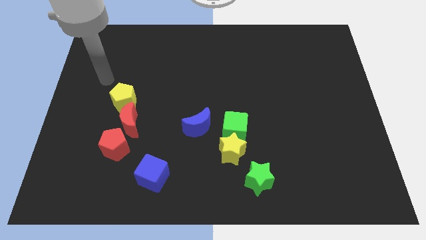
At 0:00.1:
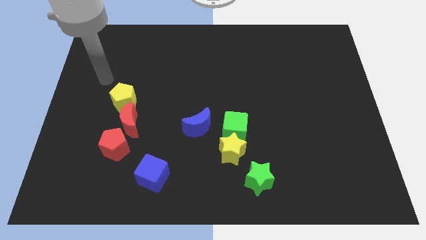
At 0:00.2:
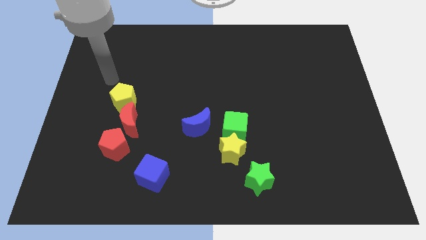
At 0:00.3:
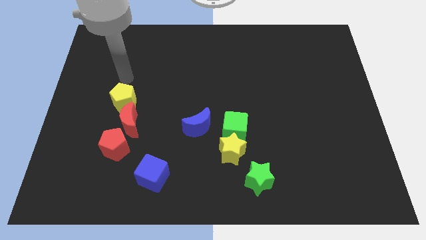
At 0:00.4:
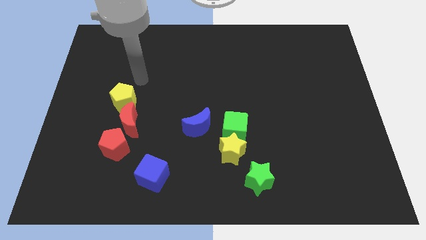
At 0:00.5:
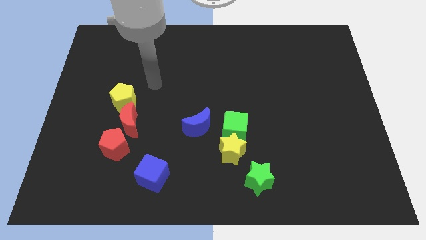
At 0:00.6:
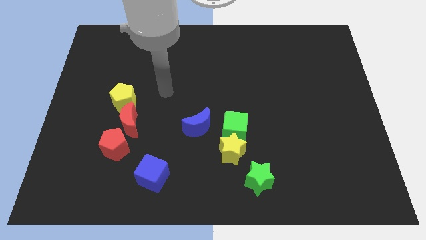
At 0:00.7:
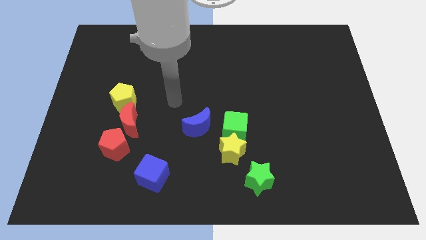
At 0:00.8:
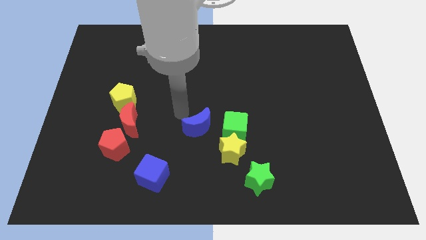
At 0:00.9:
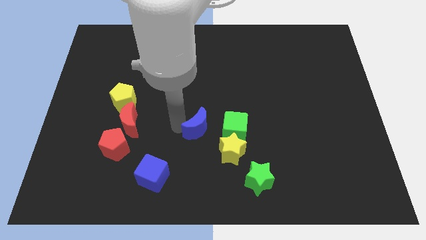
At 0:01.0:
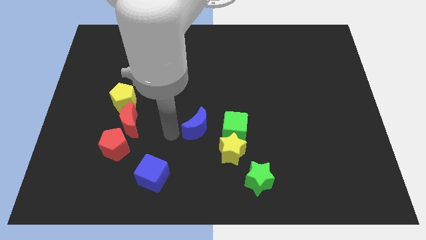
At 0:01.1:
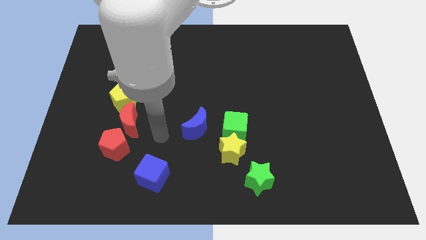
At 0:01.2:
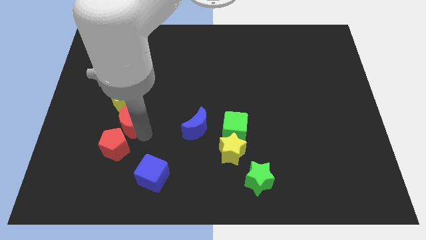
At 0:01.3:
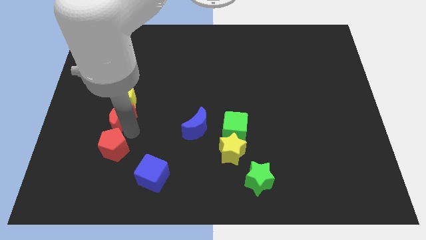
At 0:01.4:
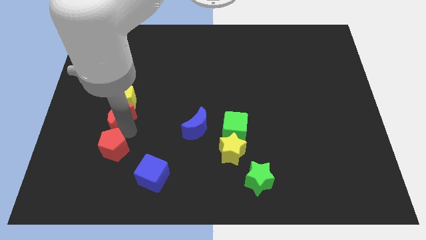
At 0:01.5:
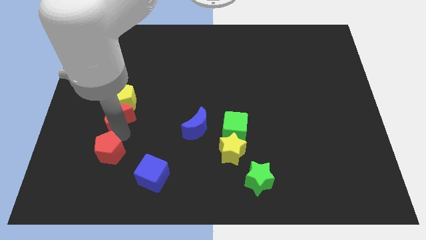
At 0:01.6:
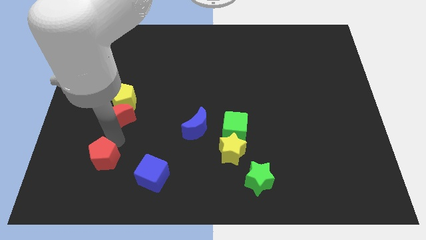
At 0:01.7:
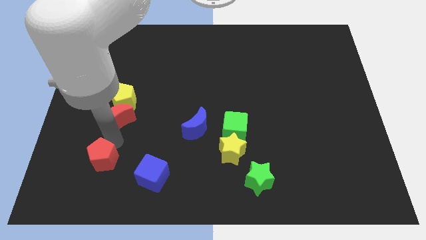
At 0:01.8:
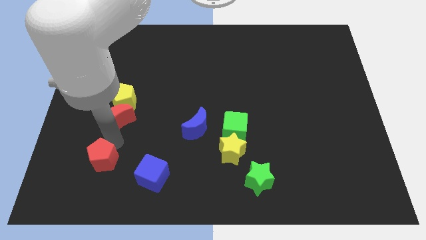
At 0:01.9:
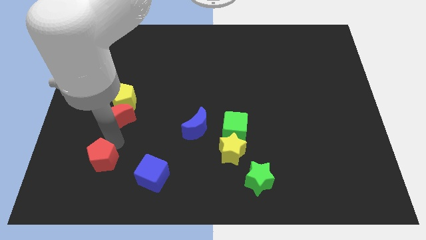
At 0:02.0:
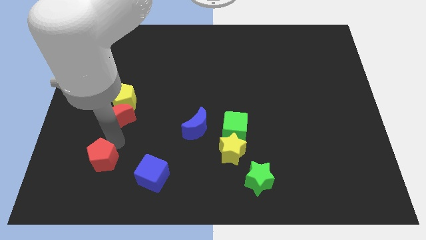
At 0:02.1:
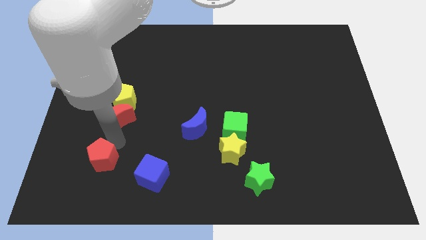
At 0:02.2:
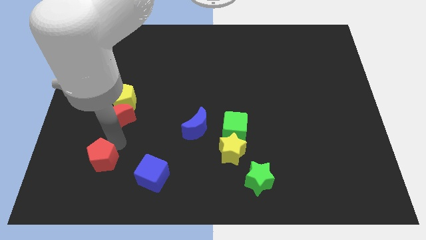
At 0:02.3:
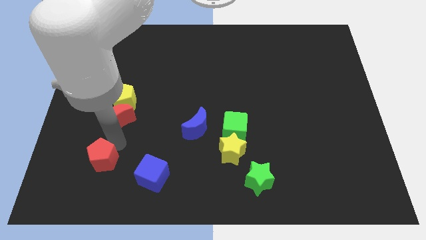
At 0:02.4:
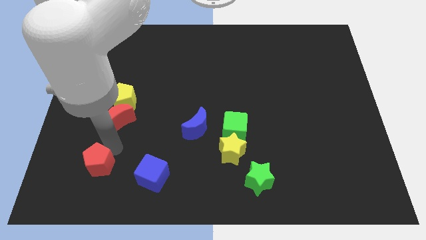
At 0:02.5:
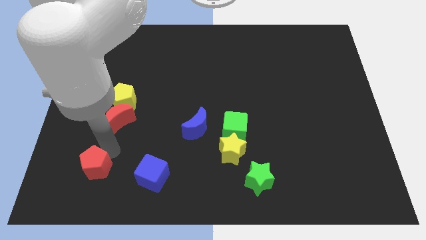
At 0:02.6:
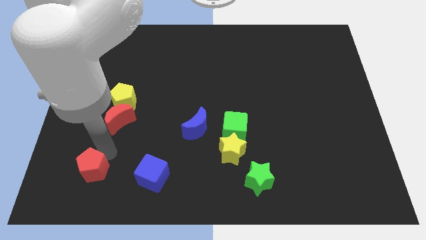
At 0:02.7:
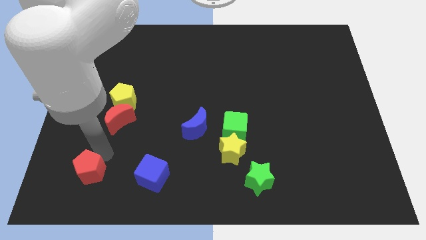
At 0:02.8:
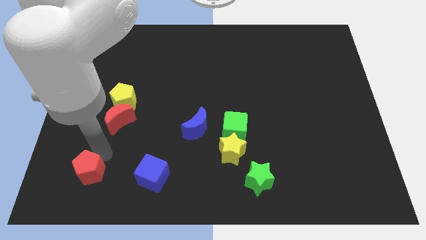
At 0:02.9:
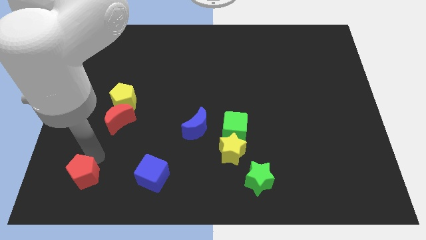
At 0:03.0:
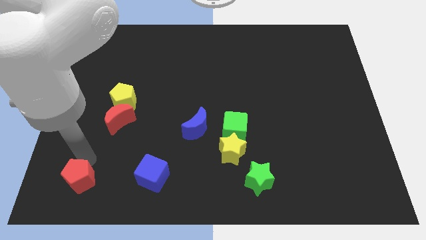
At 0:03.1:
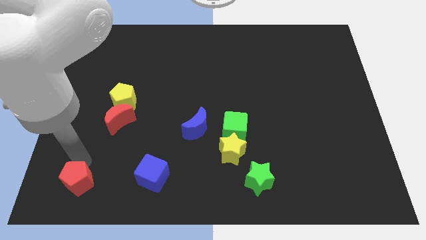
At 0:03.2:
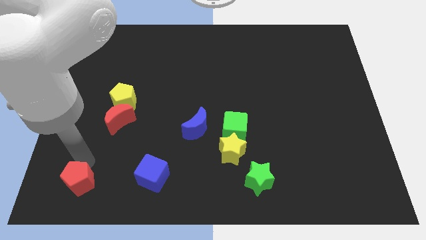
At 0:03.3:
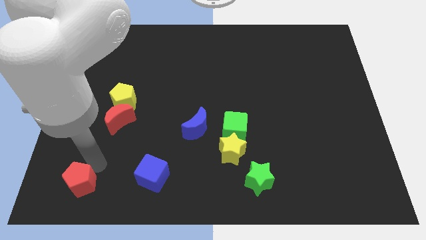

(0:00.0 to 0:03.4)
move the red pentagon towards the bottom left

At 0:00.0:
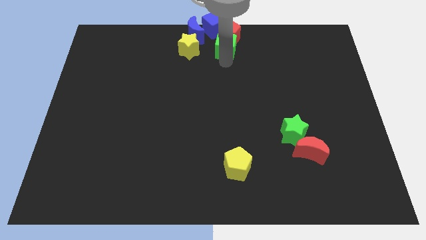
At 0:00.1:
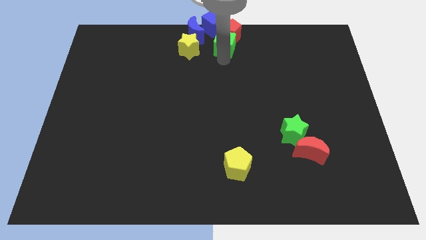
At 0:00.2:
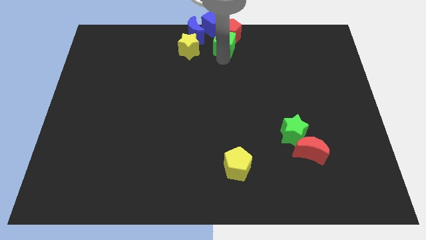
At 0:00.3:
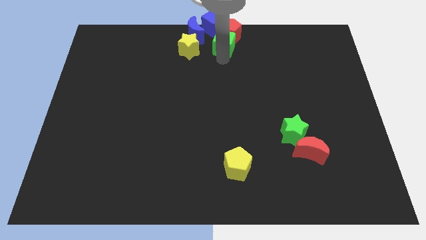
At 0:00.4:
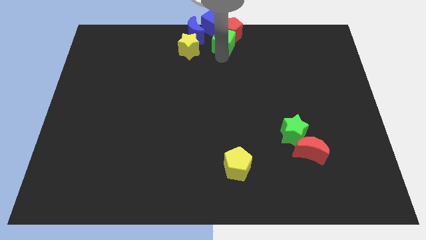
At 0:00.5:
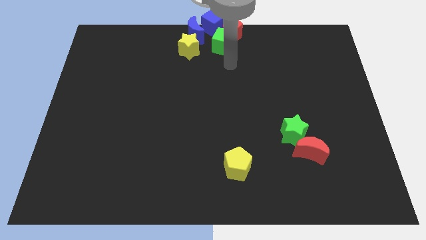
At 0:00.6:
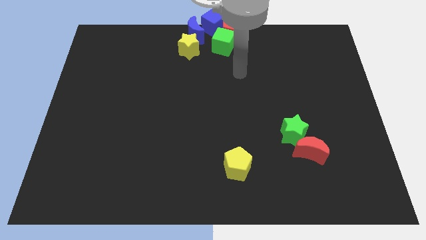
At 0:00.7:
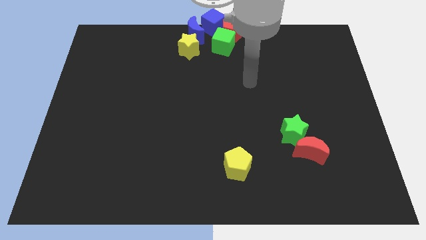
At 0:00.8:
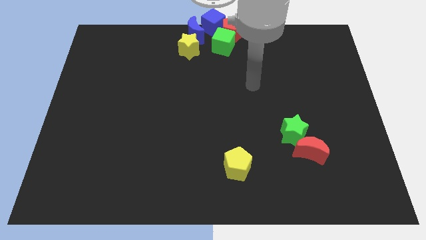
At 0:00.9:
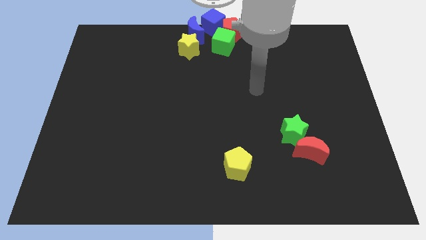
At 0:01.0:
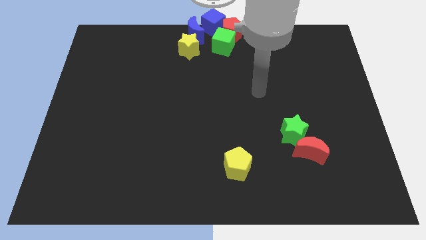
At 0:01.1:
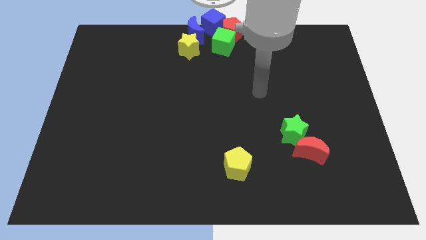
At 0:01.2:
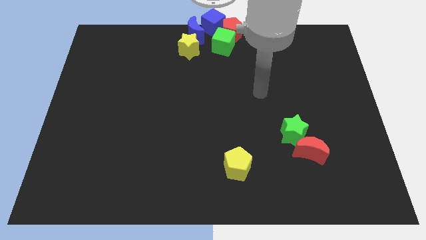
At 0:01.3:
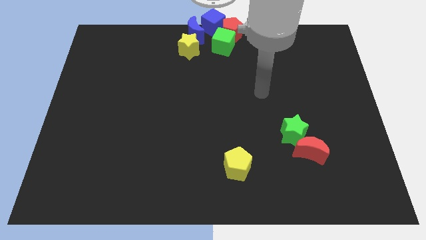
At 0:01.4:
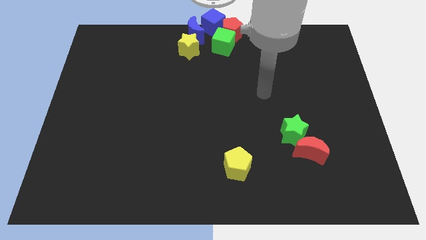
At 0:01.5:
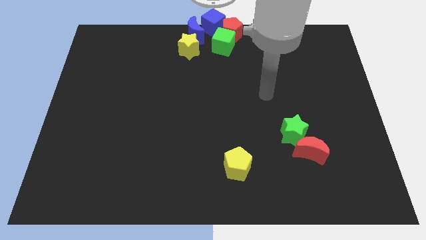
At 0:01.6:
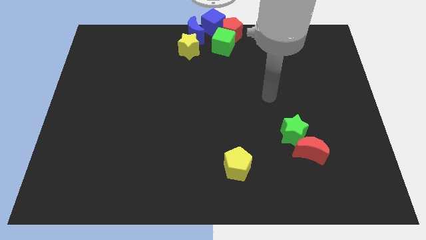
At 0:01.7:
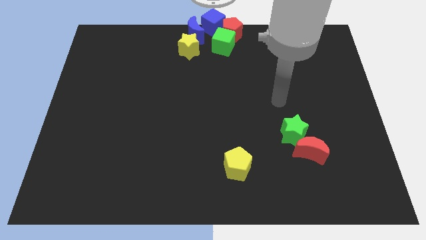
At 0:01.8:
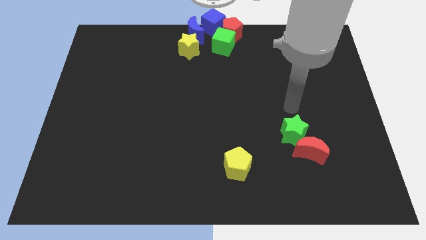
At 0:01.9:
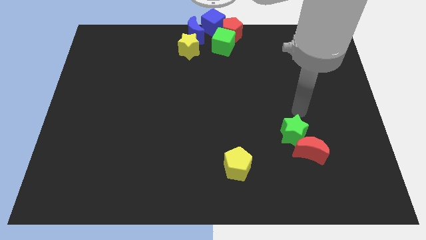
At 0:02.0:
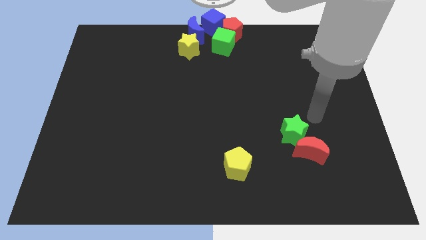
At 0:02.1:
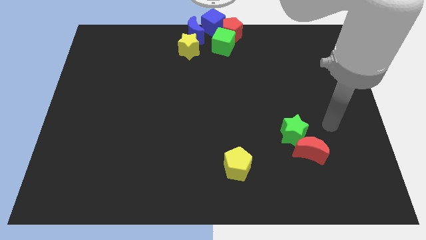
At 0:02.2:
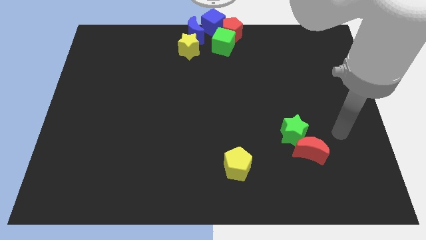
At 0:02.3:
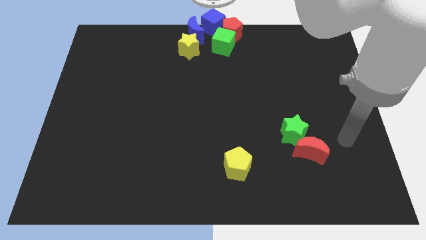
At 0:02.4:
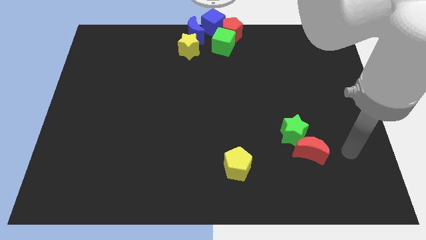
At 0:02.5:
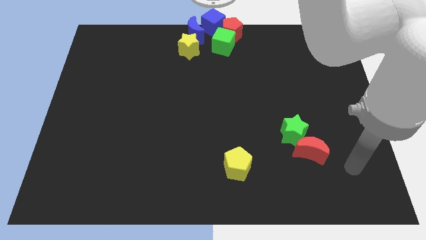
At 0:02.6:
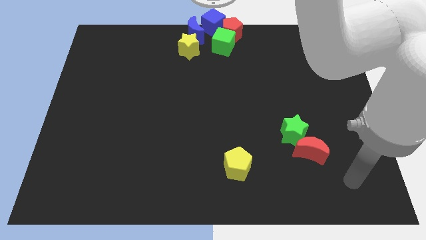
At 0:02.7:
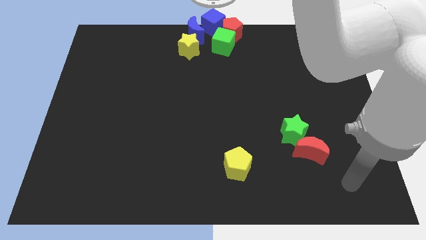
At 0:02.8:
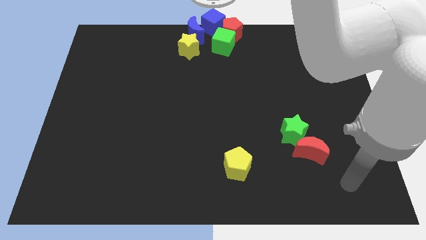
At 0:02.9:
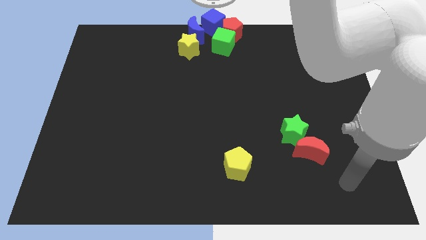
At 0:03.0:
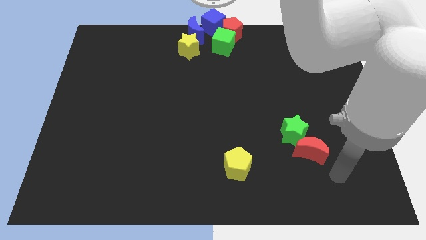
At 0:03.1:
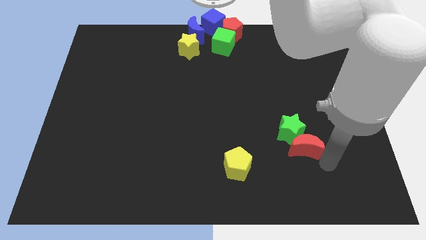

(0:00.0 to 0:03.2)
place your arm to the bottom right side of the red moon

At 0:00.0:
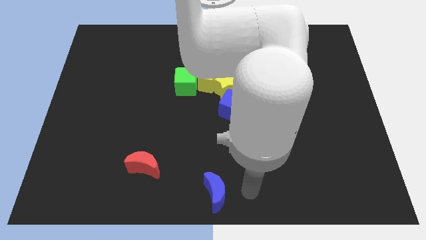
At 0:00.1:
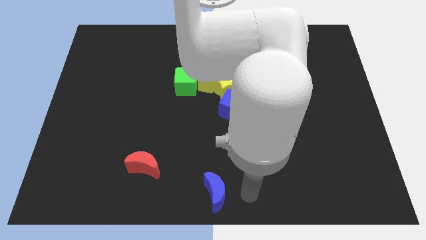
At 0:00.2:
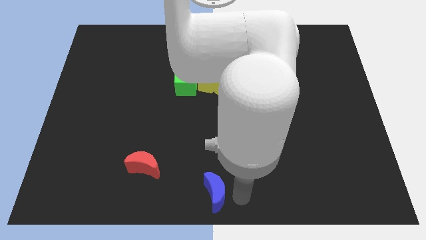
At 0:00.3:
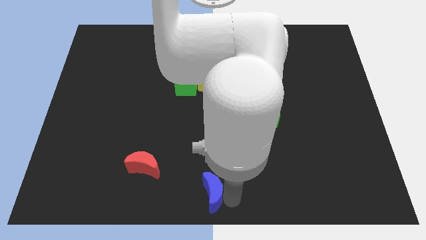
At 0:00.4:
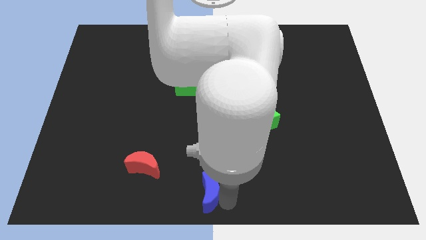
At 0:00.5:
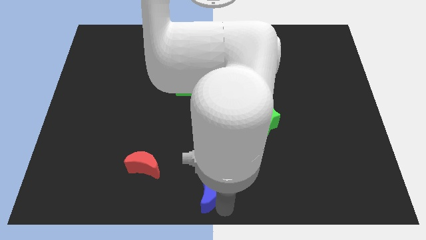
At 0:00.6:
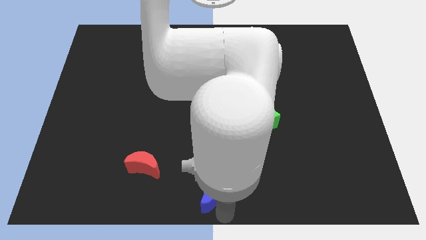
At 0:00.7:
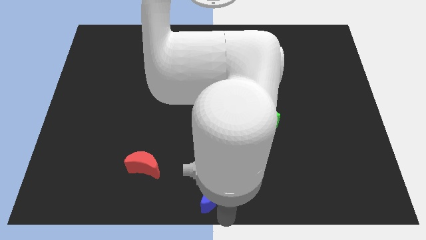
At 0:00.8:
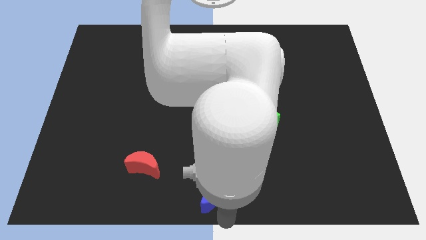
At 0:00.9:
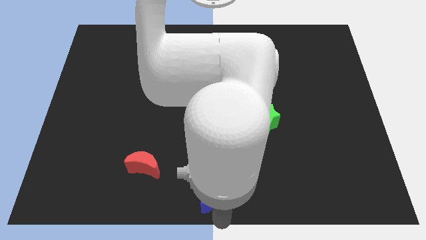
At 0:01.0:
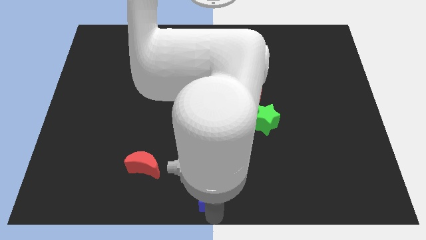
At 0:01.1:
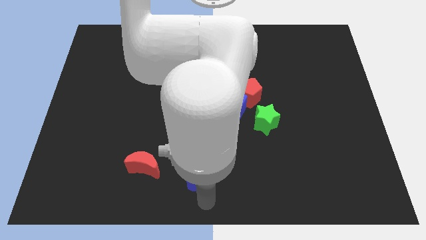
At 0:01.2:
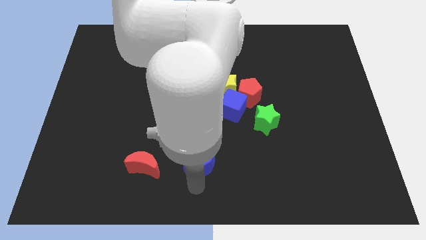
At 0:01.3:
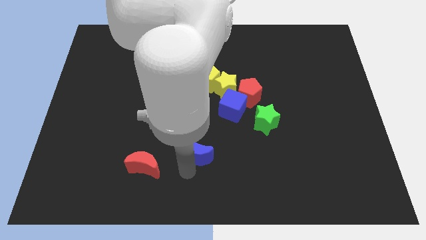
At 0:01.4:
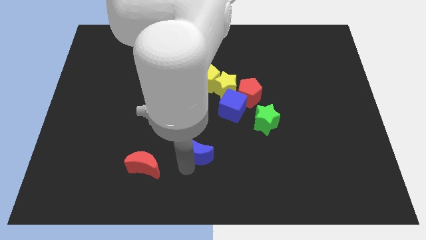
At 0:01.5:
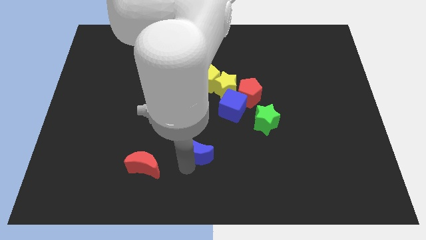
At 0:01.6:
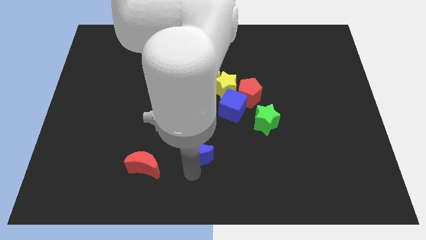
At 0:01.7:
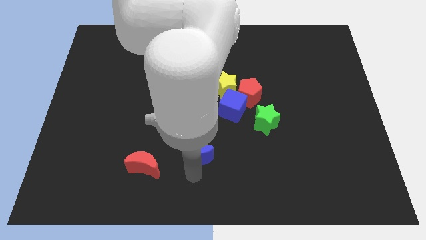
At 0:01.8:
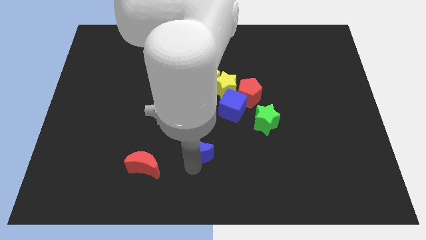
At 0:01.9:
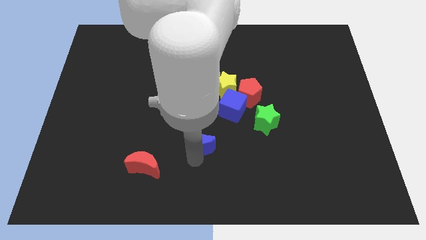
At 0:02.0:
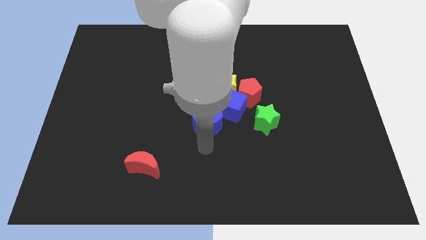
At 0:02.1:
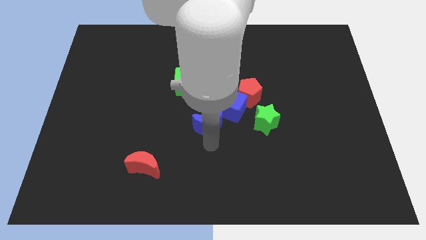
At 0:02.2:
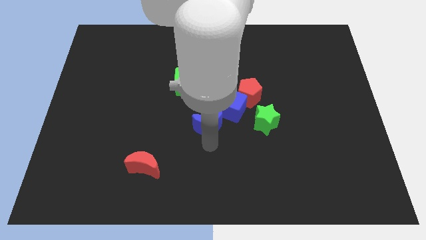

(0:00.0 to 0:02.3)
push the blue moon to bottom left of blue cube
